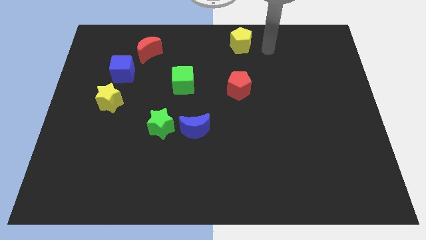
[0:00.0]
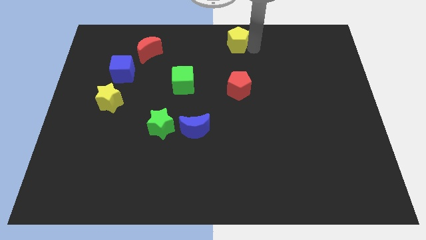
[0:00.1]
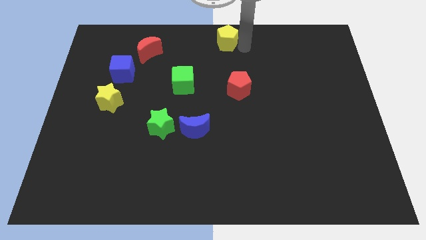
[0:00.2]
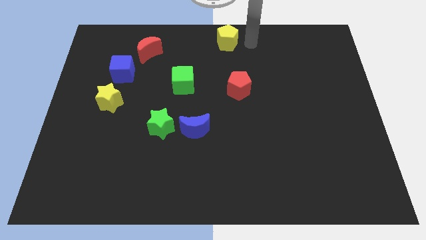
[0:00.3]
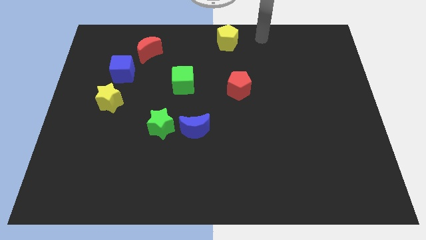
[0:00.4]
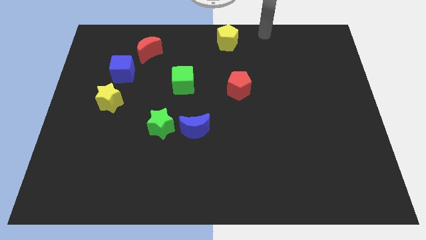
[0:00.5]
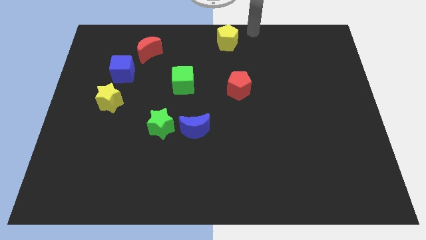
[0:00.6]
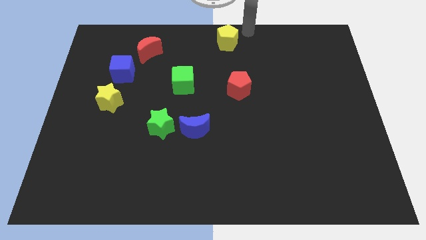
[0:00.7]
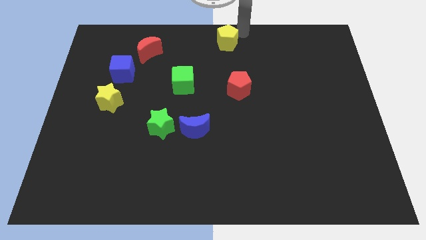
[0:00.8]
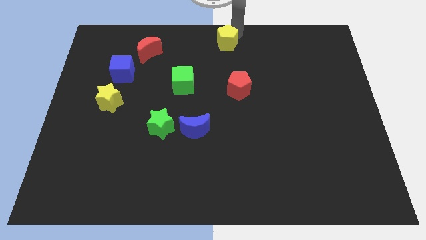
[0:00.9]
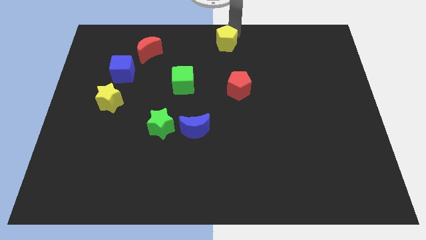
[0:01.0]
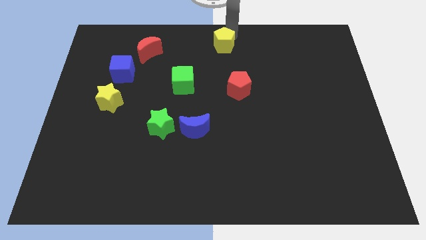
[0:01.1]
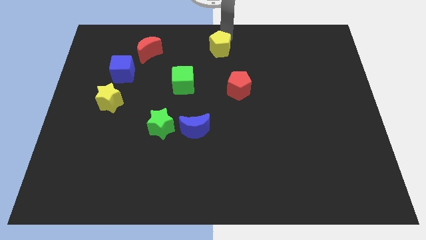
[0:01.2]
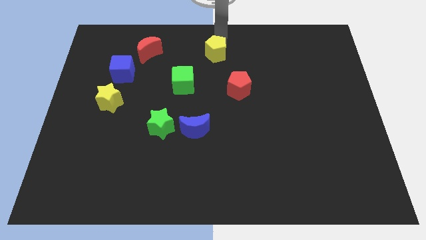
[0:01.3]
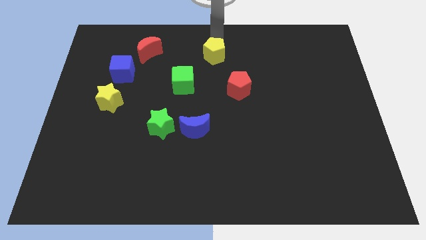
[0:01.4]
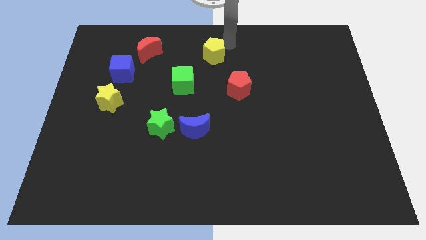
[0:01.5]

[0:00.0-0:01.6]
place yellow pentagon to the right of red crescent

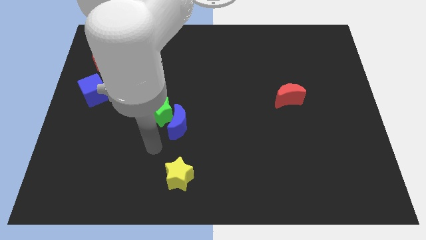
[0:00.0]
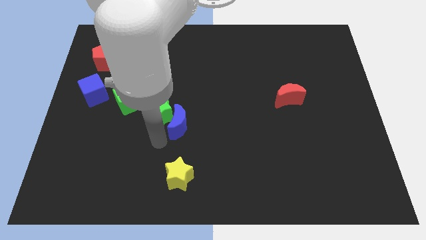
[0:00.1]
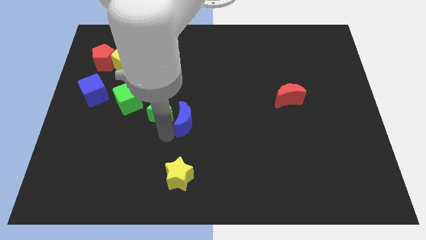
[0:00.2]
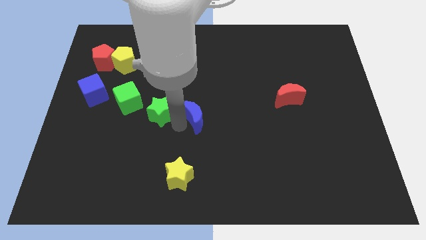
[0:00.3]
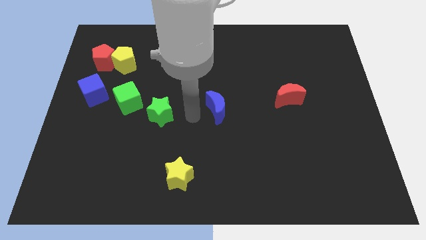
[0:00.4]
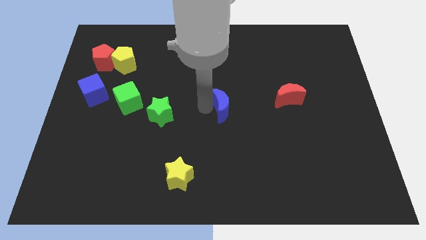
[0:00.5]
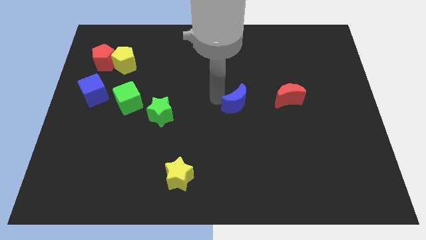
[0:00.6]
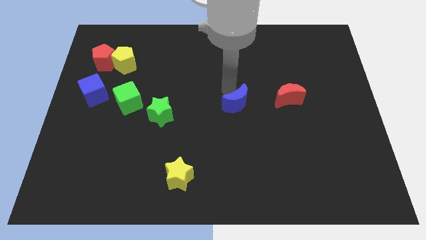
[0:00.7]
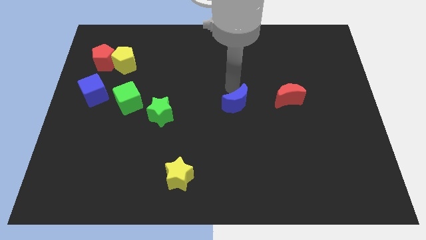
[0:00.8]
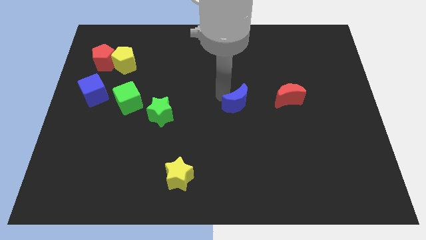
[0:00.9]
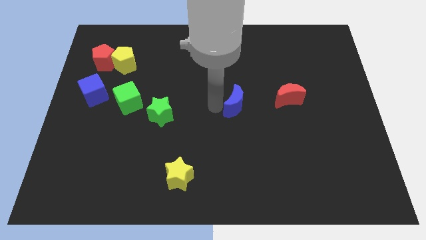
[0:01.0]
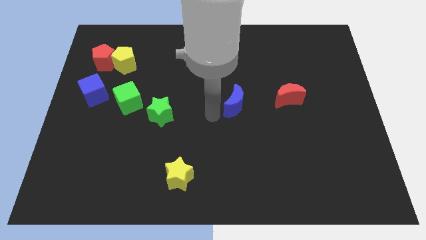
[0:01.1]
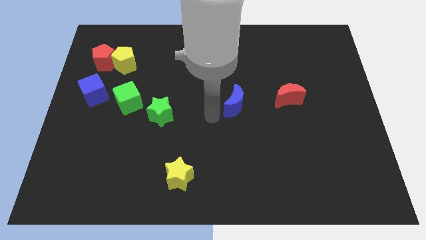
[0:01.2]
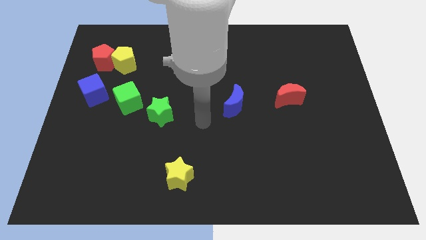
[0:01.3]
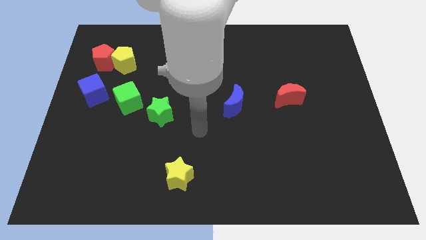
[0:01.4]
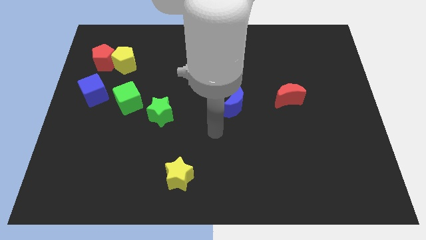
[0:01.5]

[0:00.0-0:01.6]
separate green star and blue moon

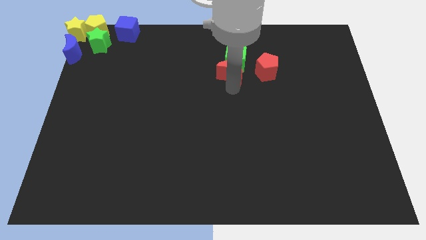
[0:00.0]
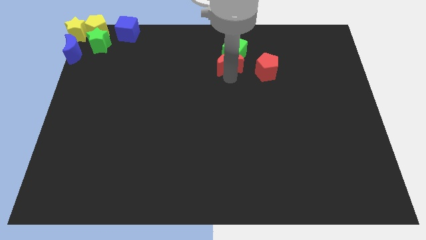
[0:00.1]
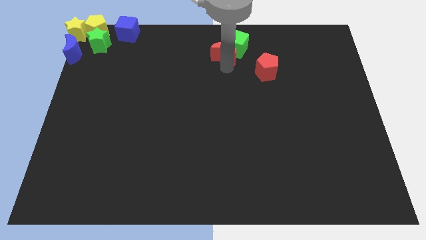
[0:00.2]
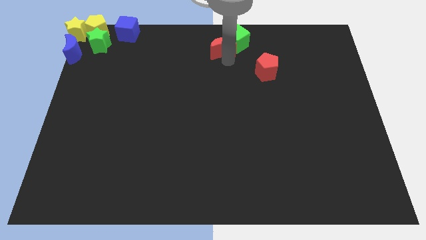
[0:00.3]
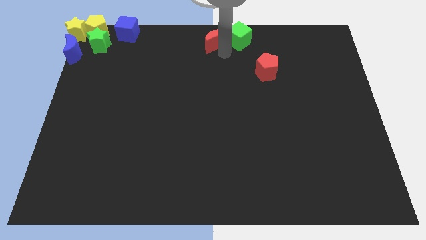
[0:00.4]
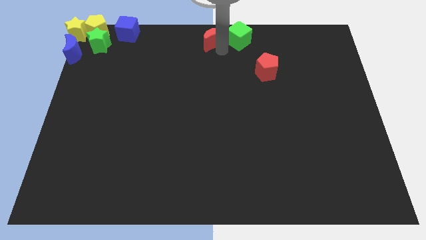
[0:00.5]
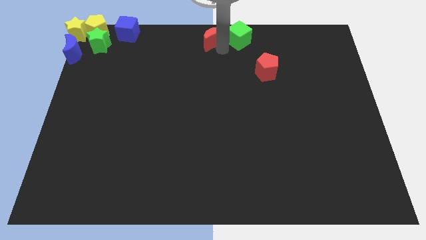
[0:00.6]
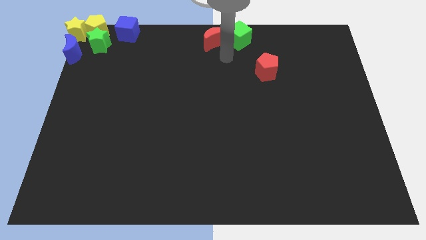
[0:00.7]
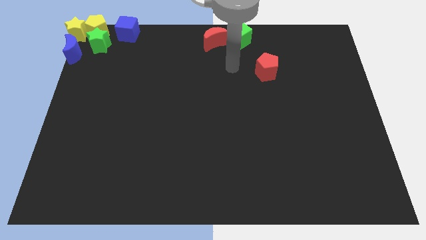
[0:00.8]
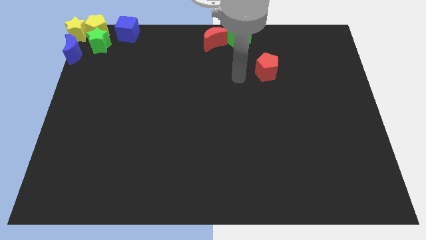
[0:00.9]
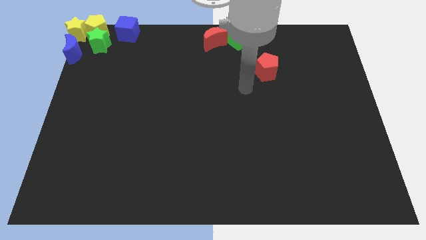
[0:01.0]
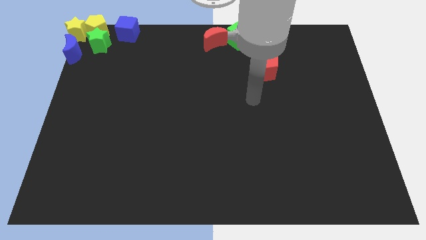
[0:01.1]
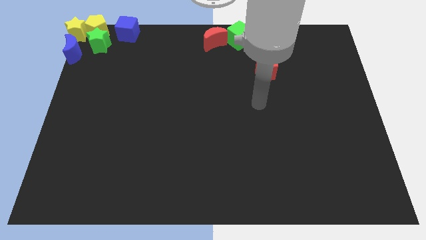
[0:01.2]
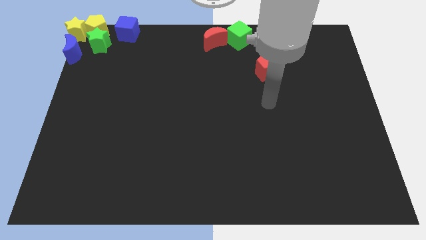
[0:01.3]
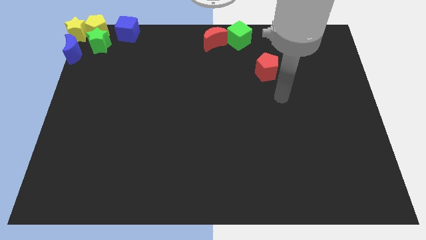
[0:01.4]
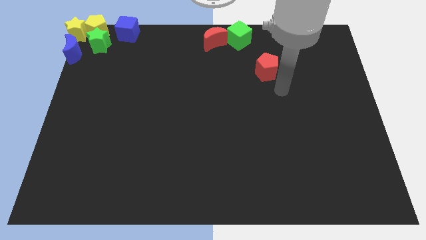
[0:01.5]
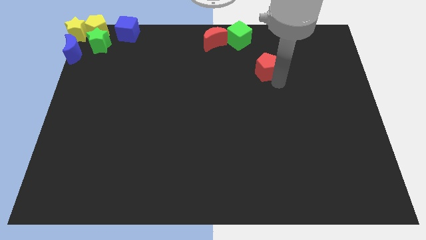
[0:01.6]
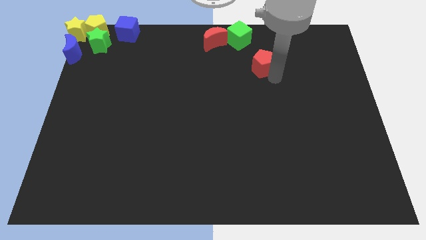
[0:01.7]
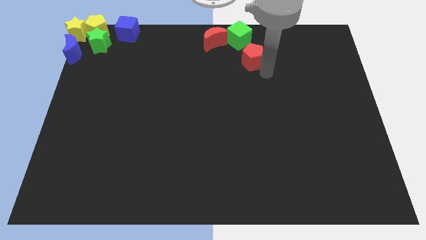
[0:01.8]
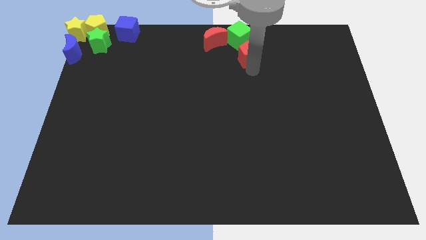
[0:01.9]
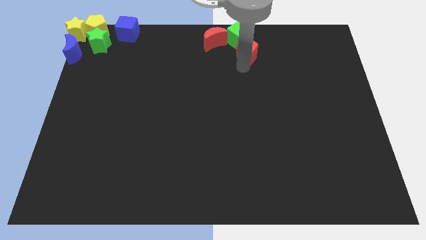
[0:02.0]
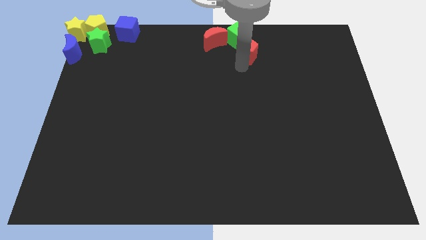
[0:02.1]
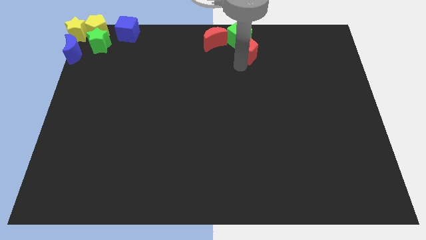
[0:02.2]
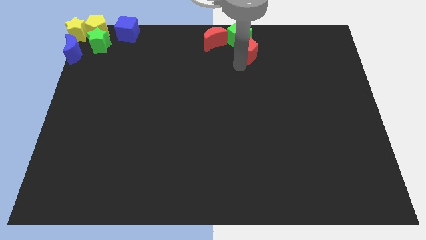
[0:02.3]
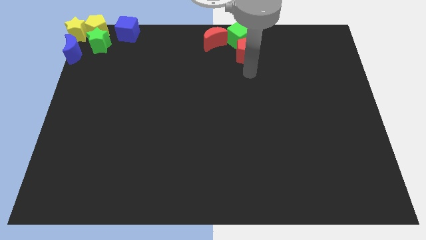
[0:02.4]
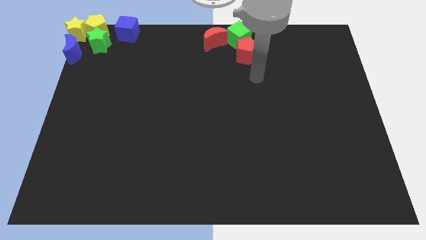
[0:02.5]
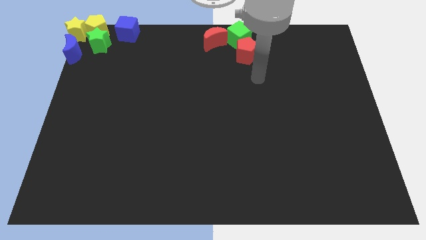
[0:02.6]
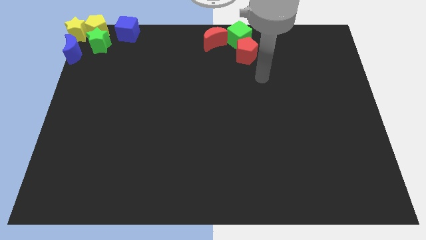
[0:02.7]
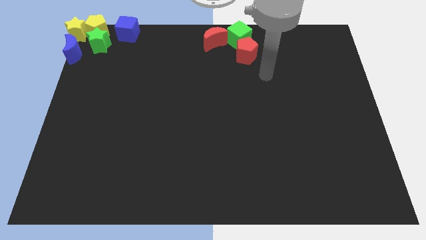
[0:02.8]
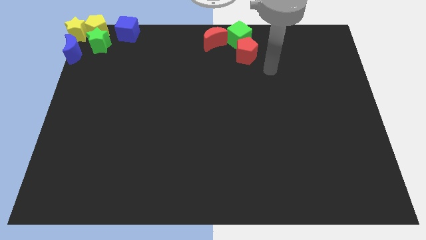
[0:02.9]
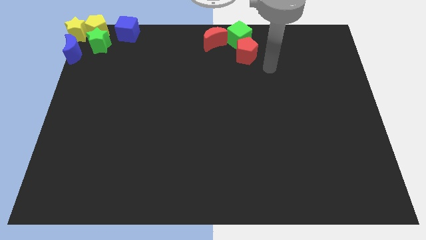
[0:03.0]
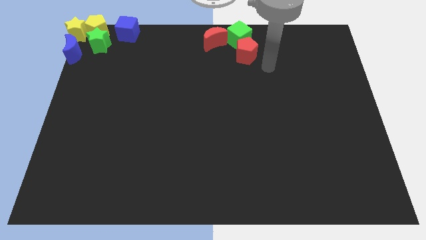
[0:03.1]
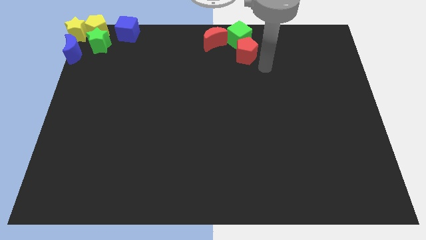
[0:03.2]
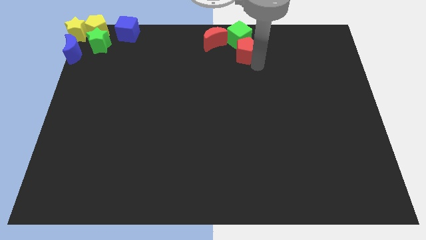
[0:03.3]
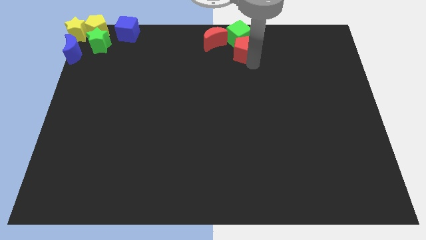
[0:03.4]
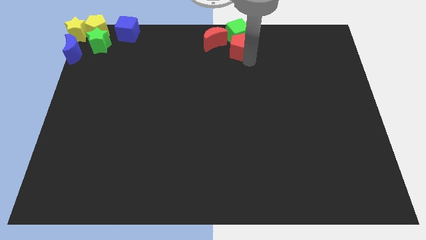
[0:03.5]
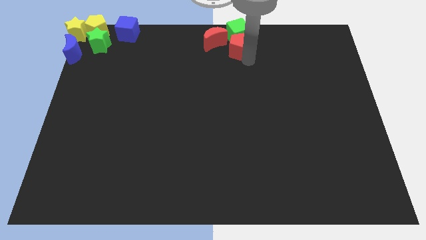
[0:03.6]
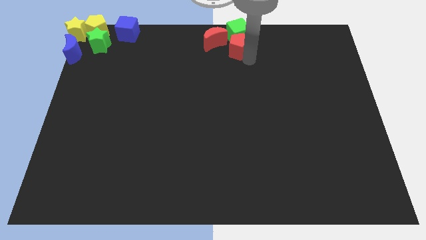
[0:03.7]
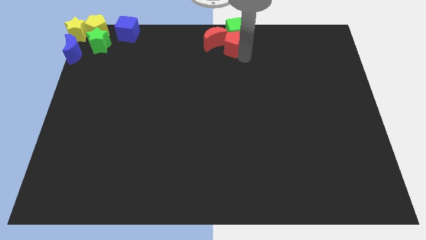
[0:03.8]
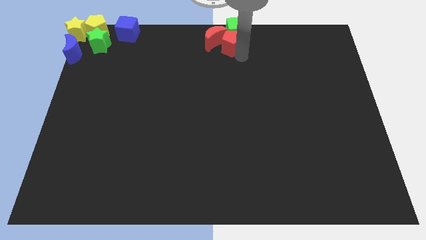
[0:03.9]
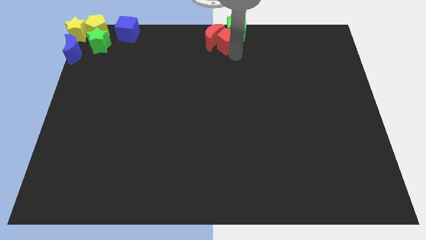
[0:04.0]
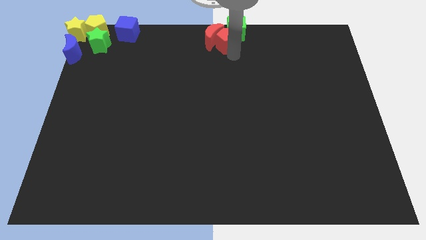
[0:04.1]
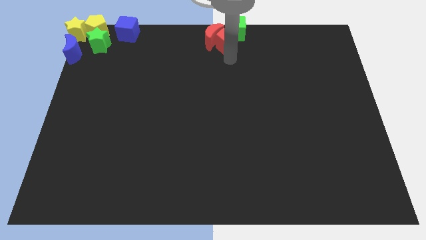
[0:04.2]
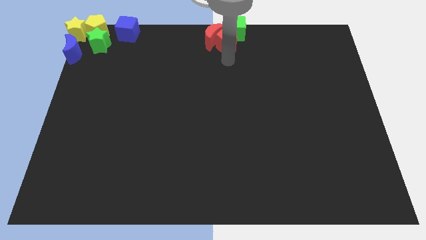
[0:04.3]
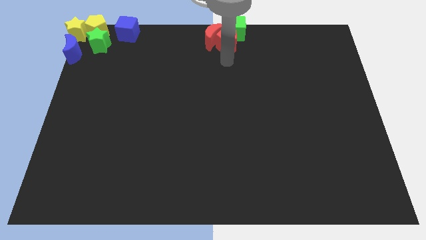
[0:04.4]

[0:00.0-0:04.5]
place the red pentagon red crescent and green cube at the top center of the board

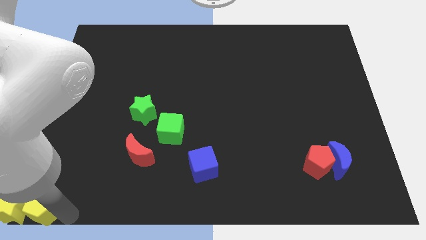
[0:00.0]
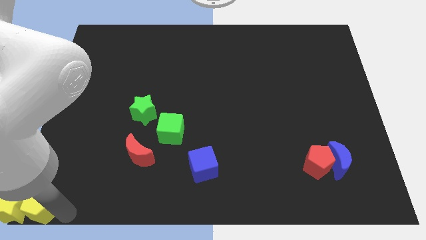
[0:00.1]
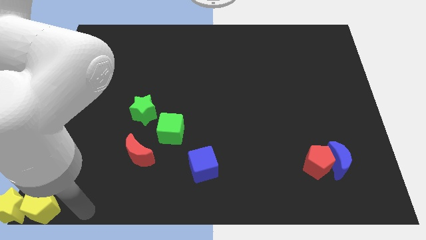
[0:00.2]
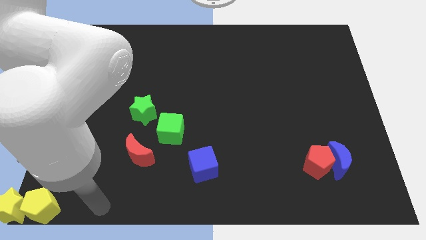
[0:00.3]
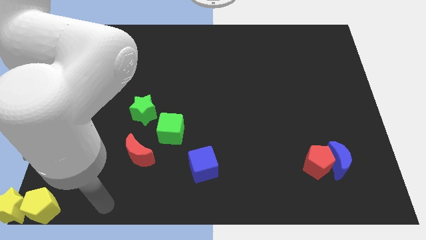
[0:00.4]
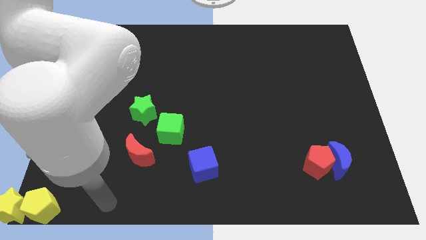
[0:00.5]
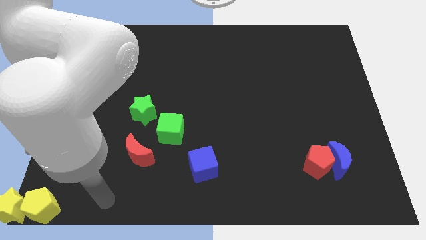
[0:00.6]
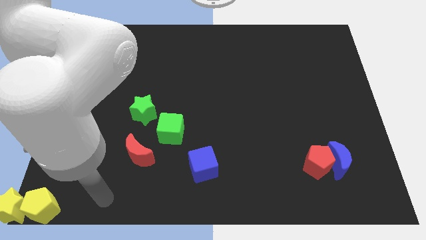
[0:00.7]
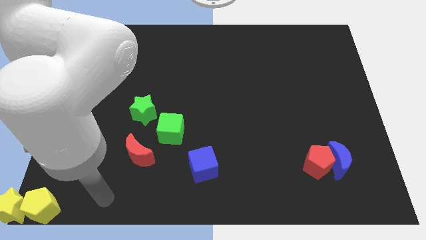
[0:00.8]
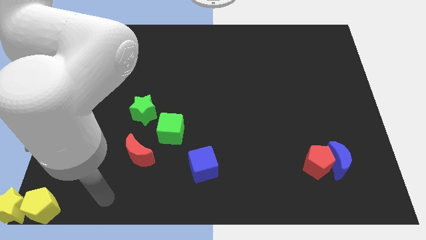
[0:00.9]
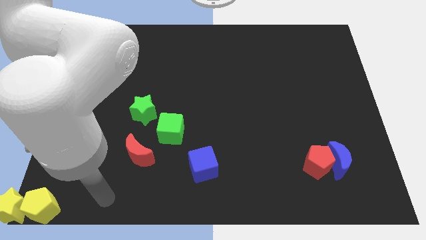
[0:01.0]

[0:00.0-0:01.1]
slightly push yellow pentagon

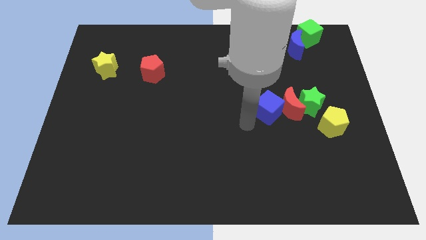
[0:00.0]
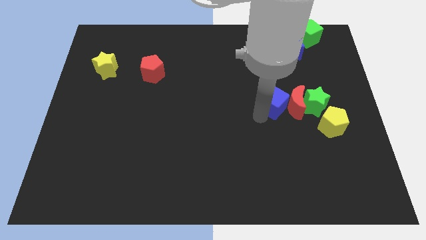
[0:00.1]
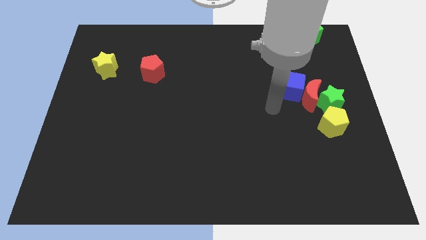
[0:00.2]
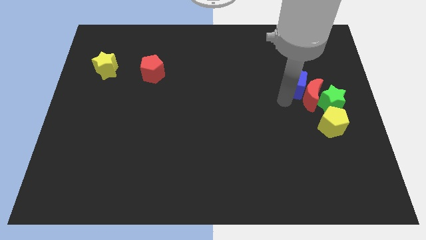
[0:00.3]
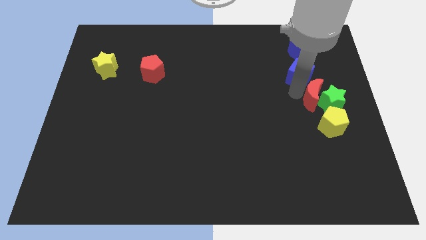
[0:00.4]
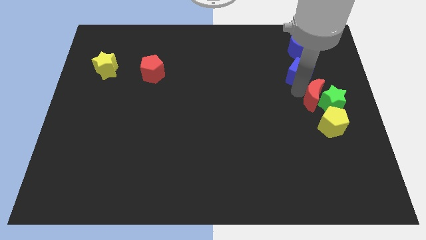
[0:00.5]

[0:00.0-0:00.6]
place the blue cube above the red crescent
